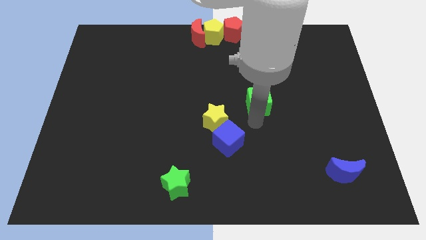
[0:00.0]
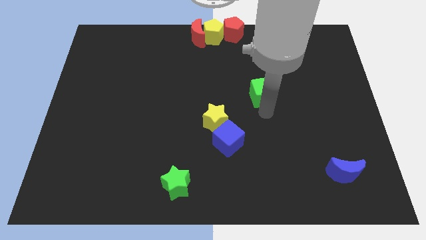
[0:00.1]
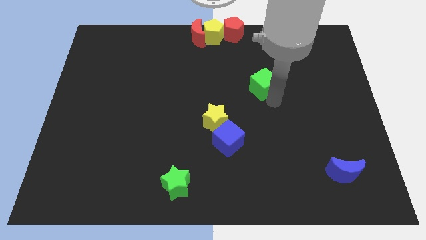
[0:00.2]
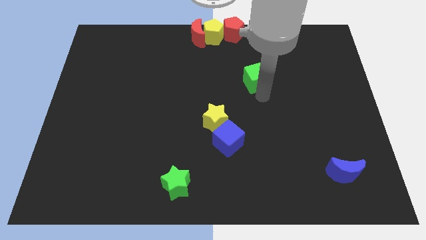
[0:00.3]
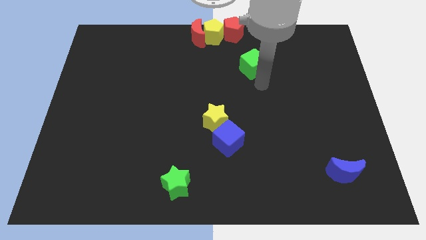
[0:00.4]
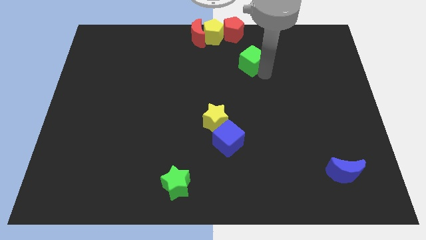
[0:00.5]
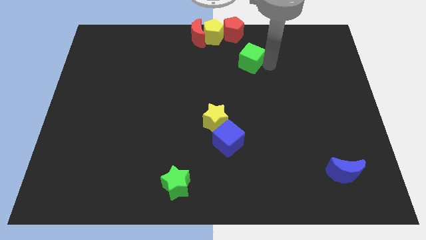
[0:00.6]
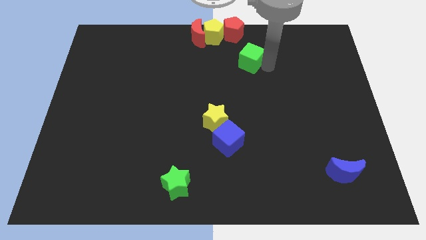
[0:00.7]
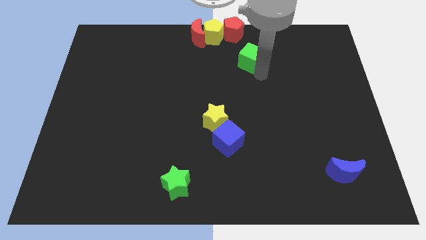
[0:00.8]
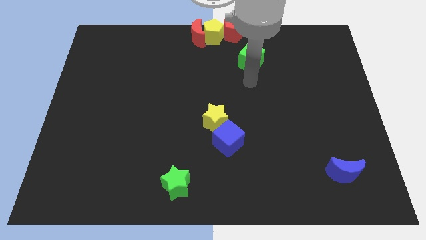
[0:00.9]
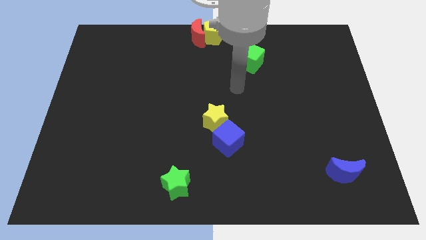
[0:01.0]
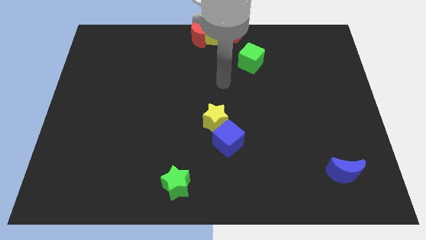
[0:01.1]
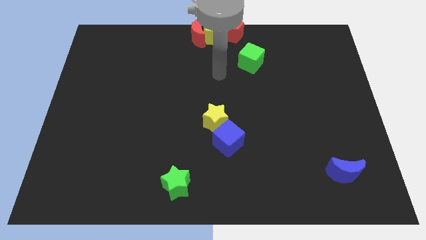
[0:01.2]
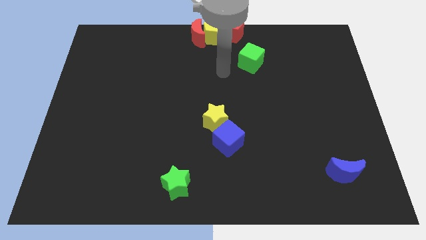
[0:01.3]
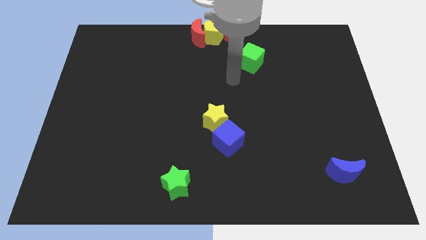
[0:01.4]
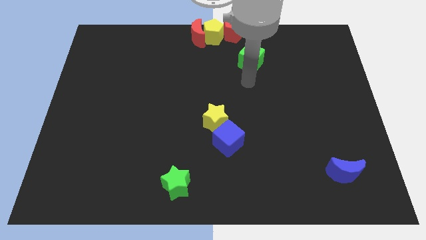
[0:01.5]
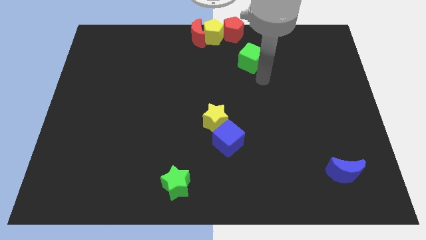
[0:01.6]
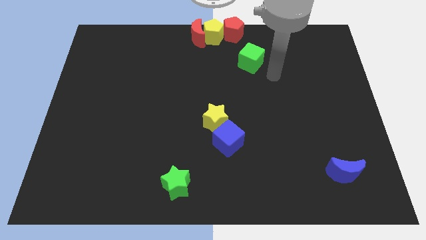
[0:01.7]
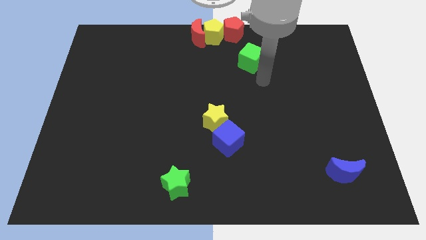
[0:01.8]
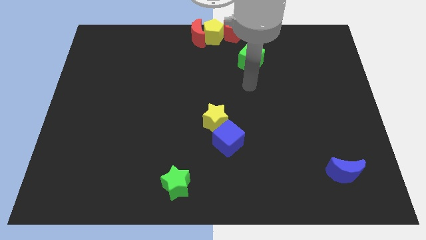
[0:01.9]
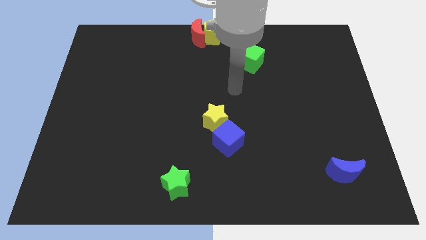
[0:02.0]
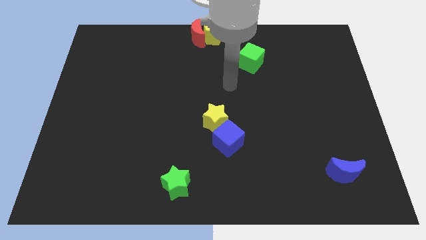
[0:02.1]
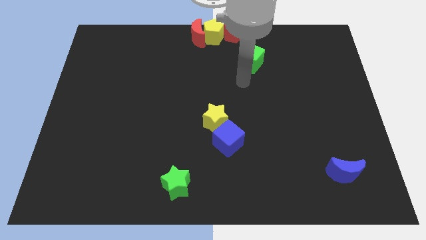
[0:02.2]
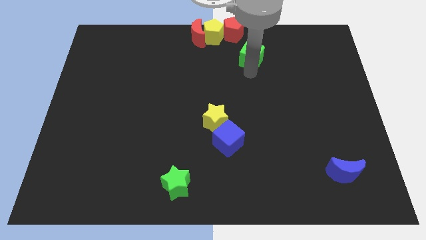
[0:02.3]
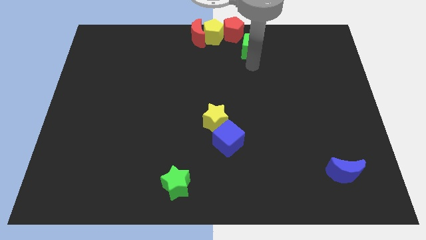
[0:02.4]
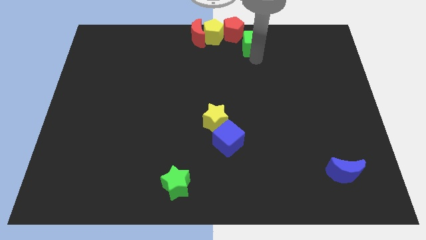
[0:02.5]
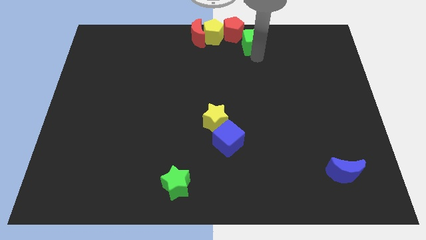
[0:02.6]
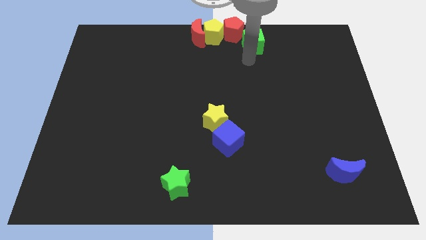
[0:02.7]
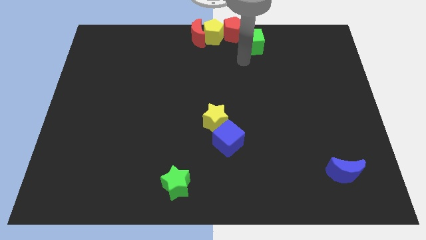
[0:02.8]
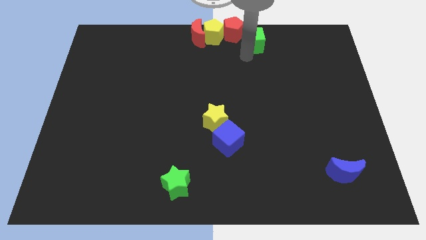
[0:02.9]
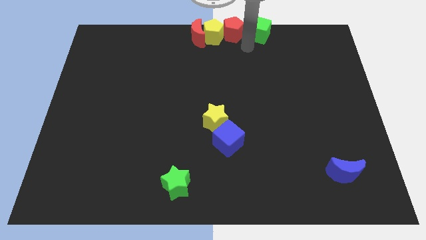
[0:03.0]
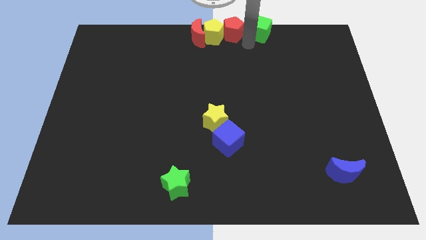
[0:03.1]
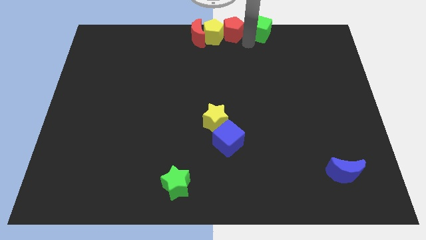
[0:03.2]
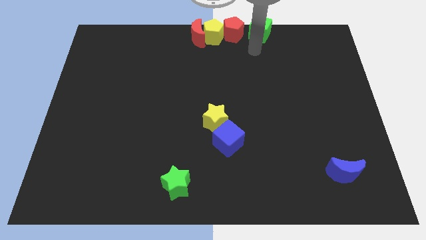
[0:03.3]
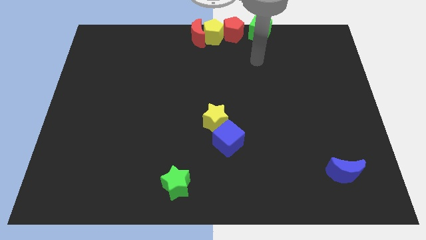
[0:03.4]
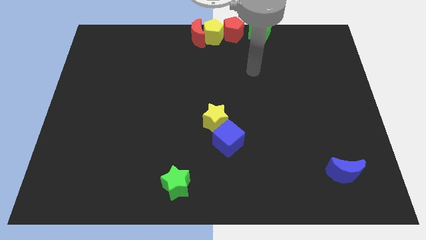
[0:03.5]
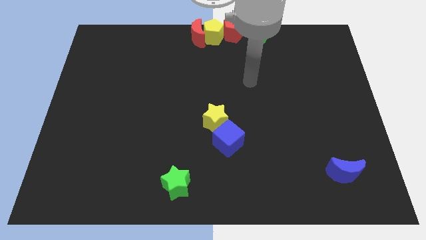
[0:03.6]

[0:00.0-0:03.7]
move the green cube parallel to the red pentagon

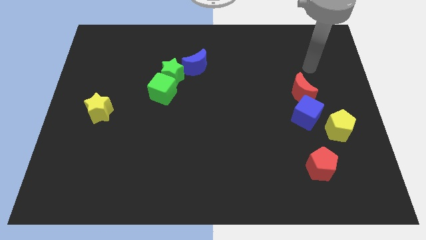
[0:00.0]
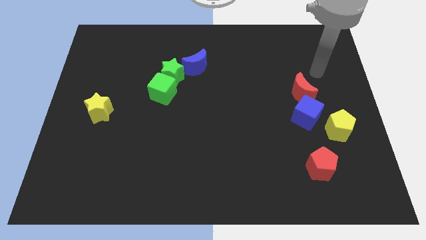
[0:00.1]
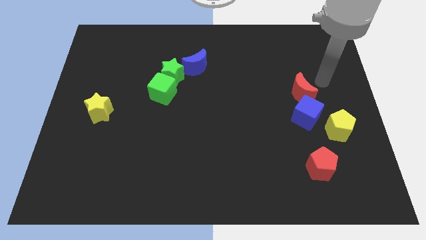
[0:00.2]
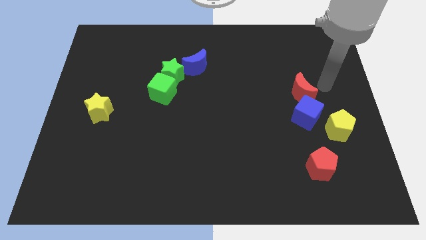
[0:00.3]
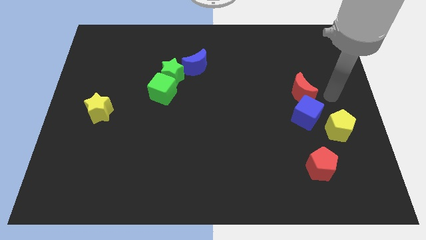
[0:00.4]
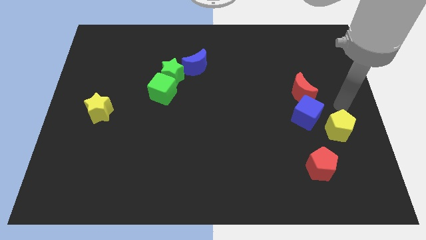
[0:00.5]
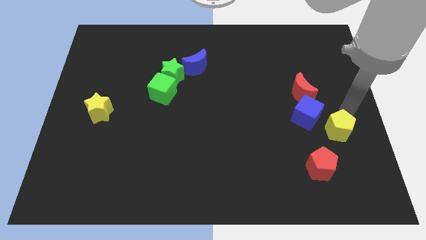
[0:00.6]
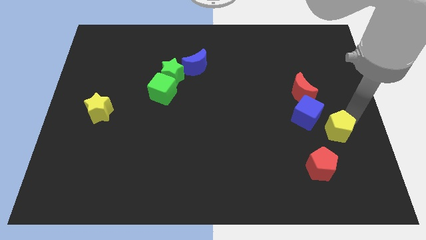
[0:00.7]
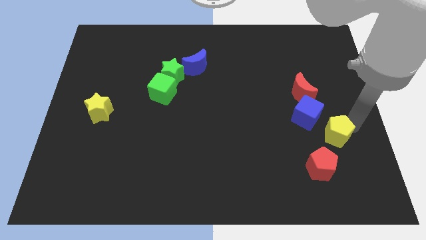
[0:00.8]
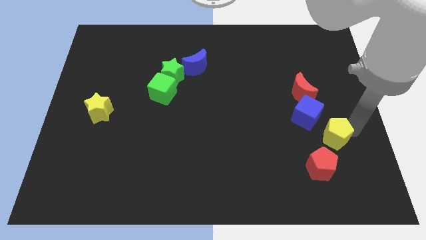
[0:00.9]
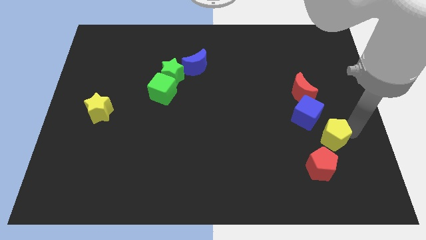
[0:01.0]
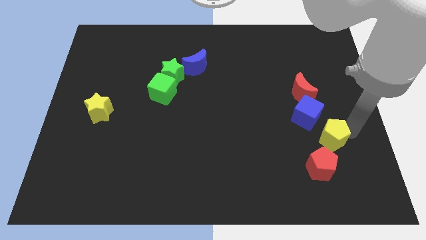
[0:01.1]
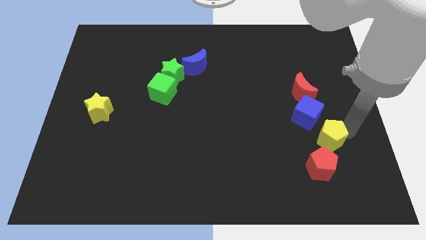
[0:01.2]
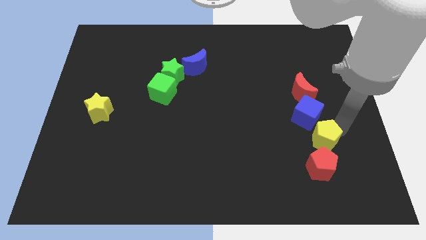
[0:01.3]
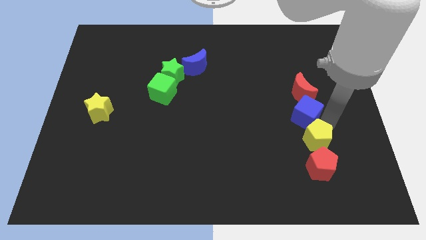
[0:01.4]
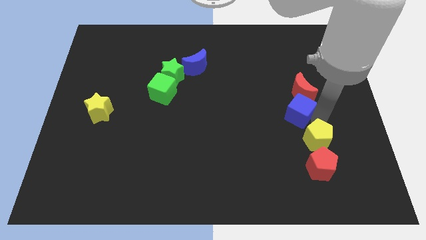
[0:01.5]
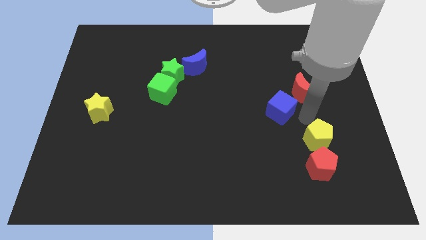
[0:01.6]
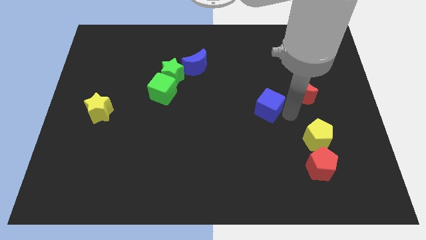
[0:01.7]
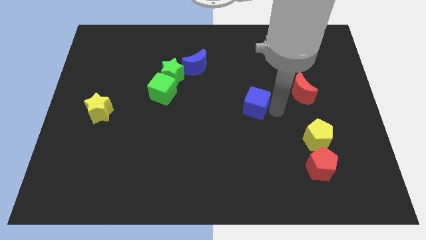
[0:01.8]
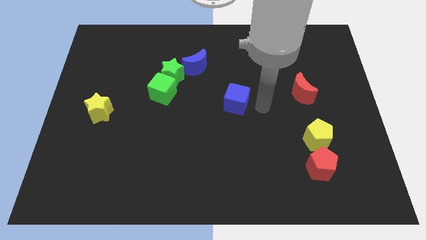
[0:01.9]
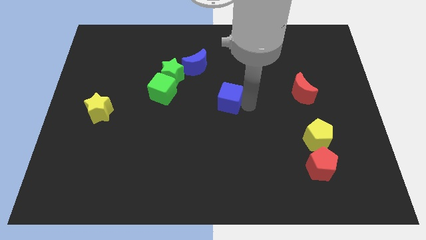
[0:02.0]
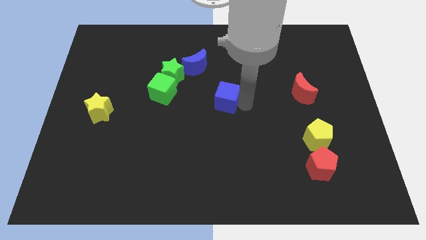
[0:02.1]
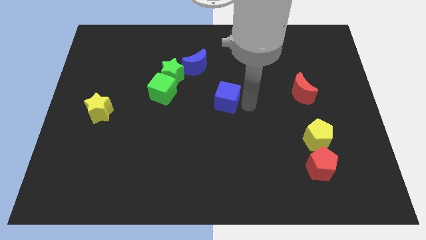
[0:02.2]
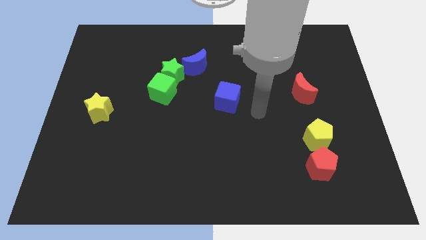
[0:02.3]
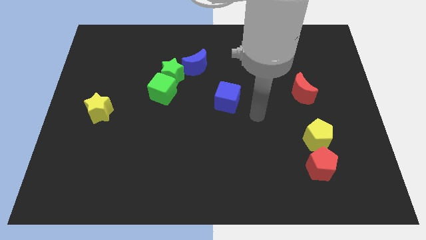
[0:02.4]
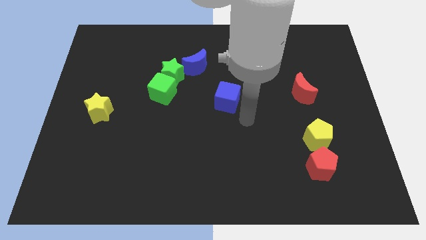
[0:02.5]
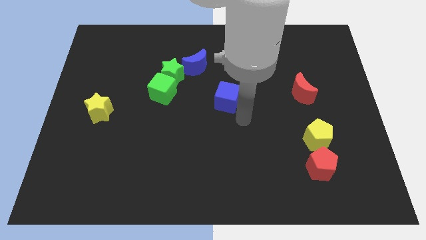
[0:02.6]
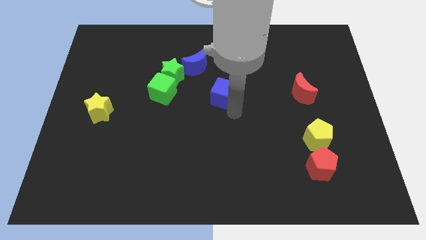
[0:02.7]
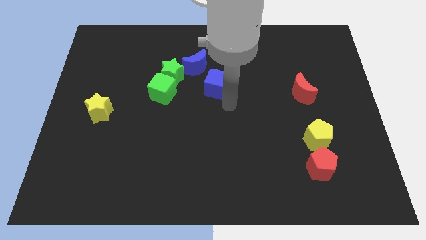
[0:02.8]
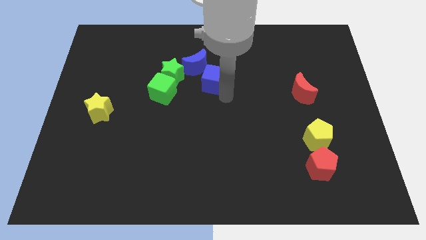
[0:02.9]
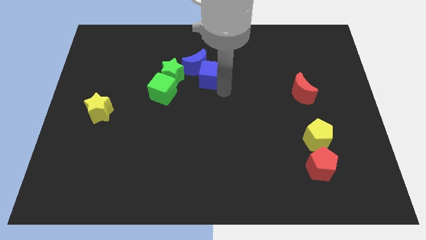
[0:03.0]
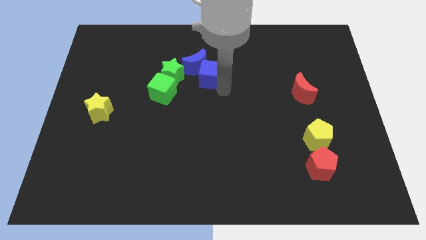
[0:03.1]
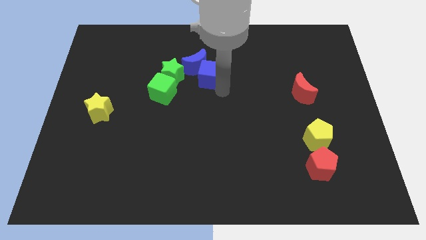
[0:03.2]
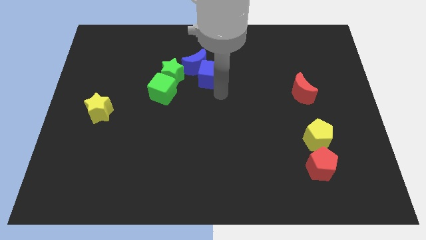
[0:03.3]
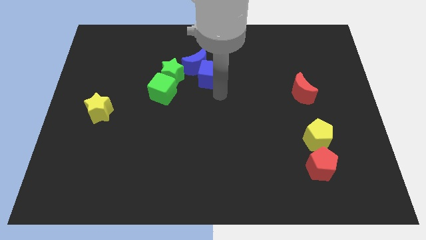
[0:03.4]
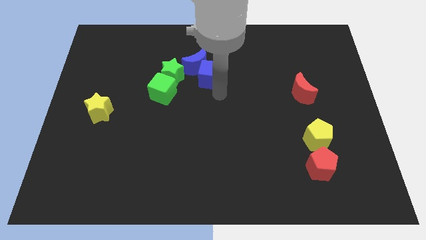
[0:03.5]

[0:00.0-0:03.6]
push blue cube towards blue crescent

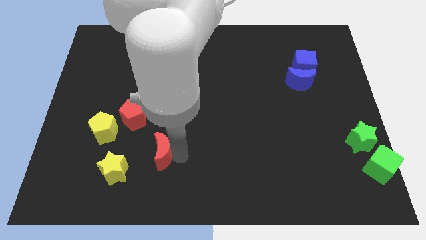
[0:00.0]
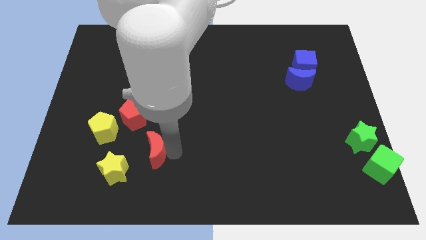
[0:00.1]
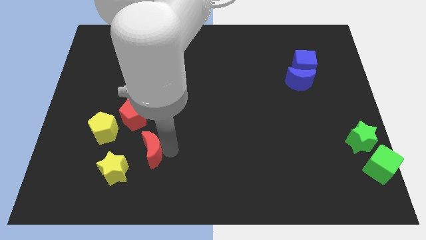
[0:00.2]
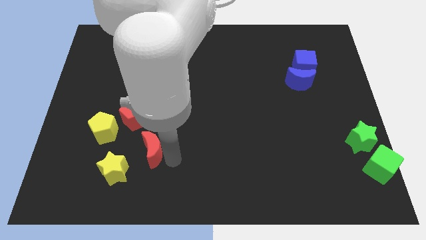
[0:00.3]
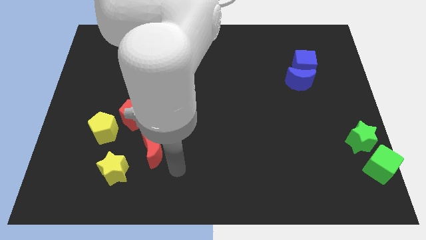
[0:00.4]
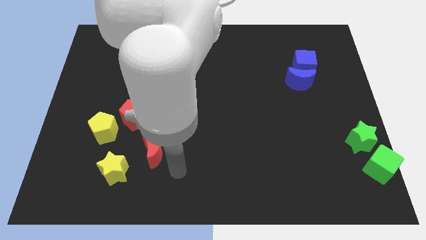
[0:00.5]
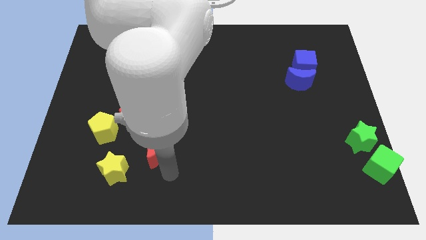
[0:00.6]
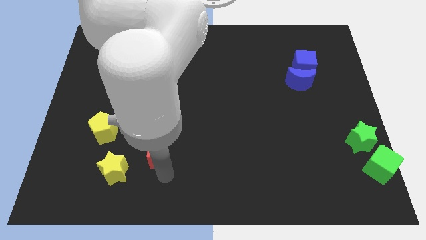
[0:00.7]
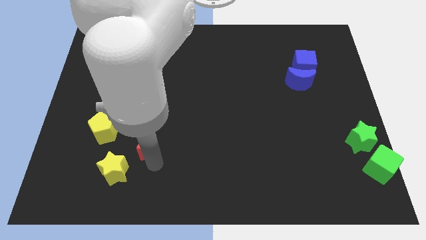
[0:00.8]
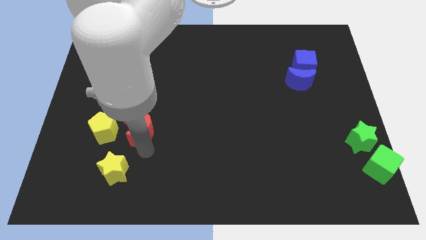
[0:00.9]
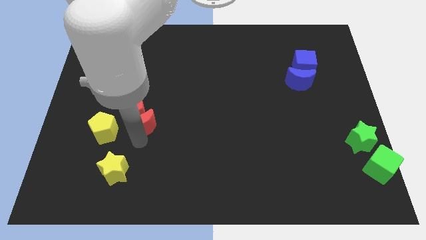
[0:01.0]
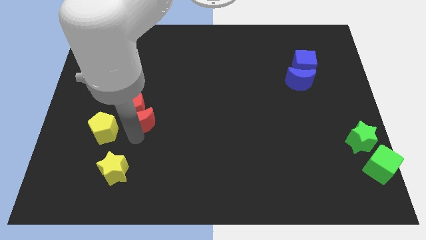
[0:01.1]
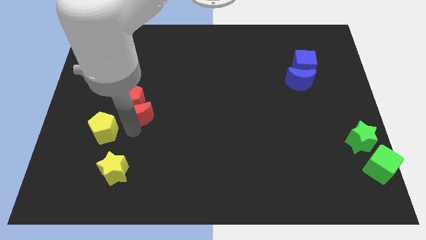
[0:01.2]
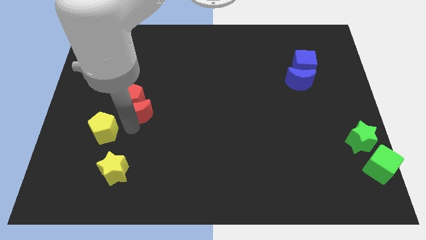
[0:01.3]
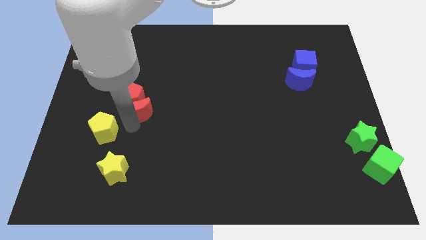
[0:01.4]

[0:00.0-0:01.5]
push the red crescent into the red pentagon
